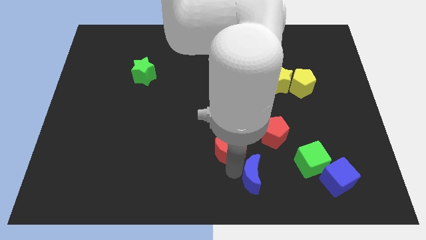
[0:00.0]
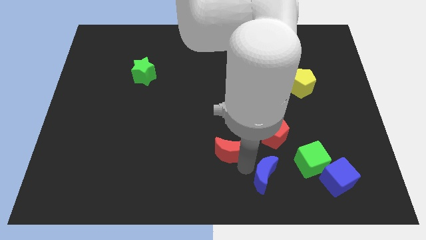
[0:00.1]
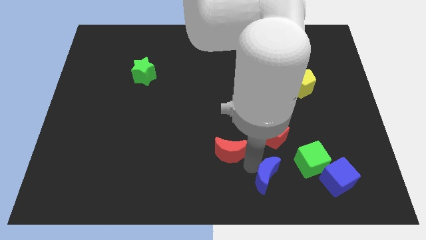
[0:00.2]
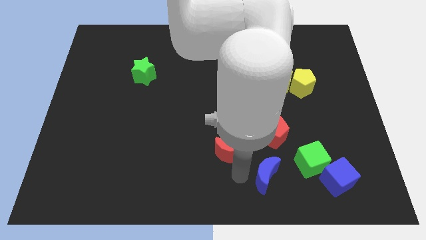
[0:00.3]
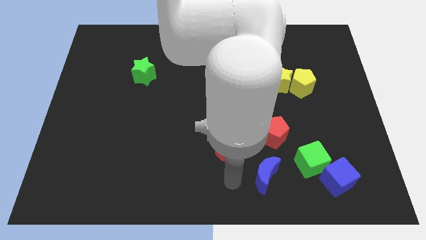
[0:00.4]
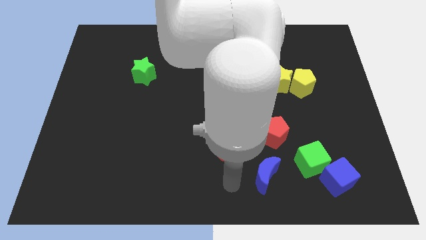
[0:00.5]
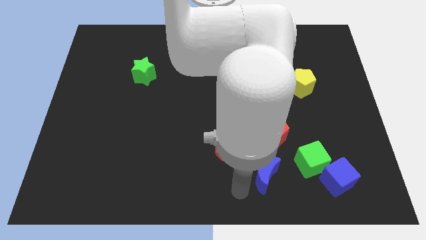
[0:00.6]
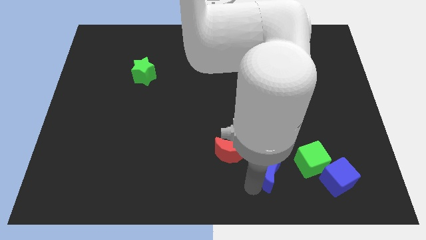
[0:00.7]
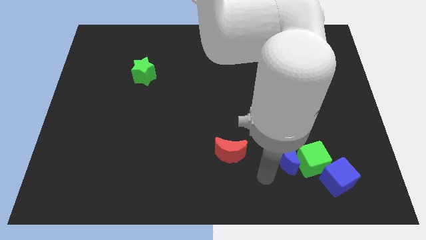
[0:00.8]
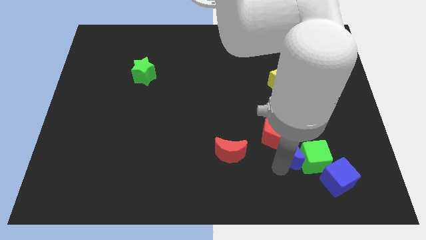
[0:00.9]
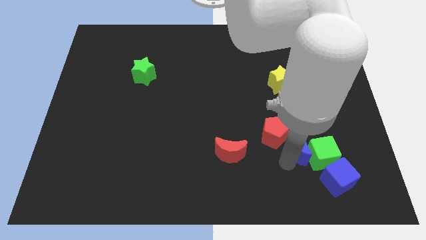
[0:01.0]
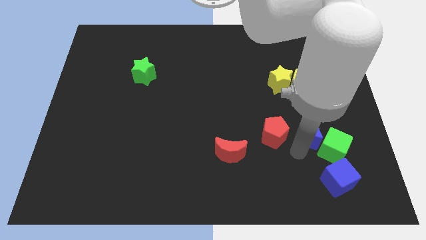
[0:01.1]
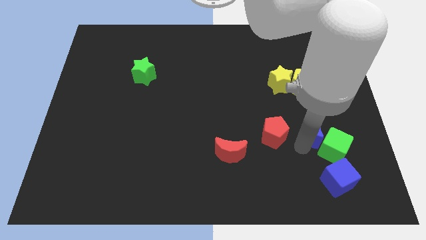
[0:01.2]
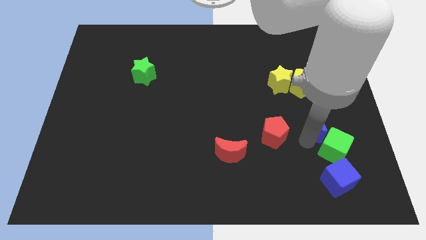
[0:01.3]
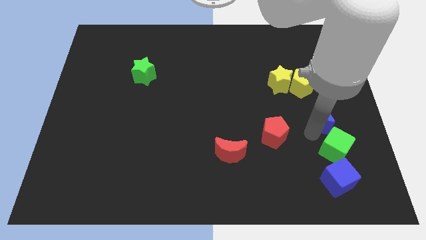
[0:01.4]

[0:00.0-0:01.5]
move the blue crescent to the top left of green cube

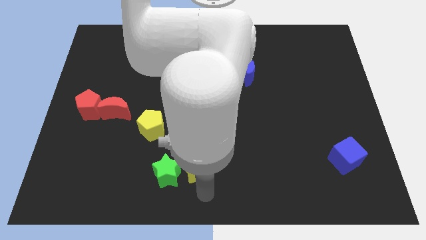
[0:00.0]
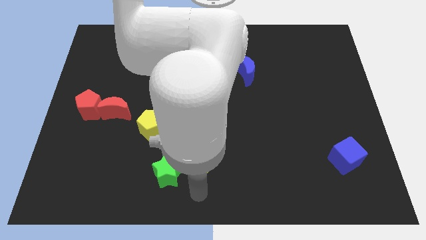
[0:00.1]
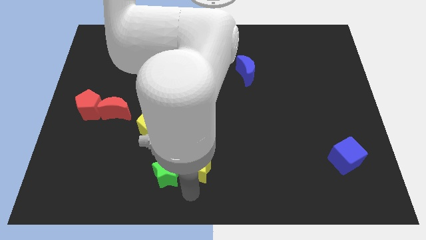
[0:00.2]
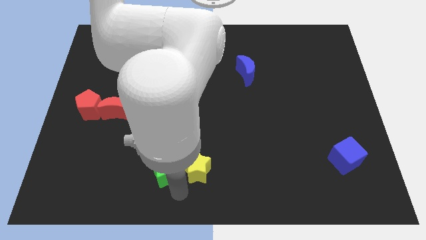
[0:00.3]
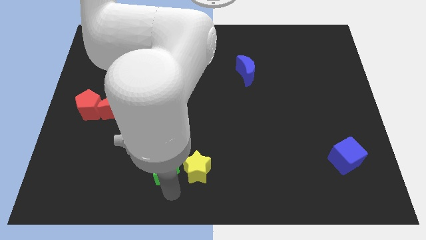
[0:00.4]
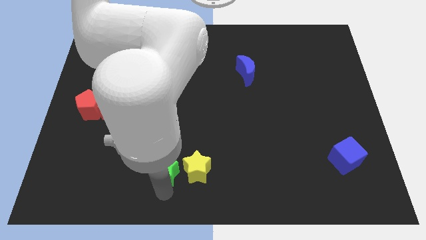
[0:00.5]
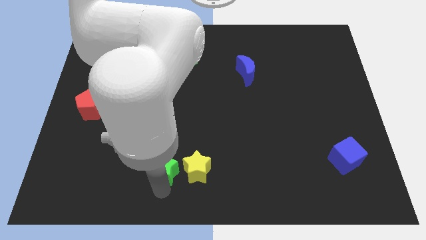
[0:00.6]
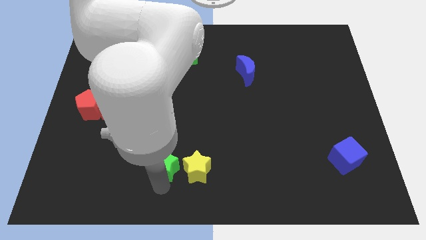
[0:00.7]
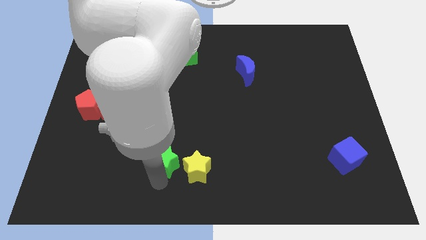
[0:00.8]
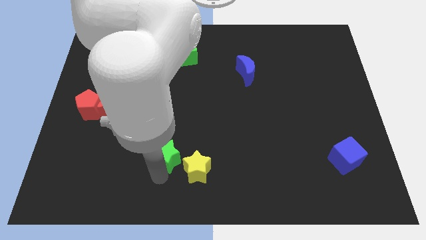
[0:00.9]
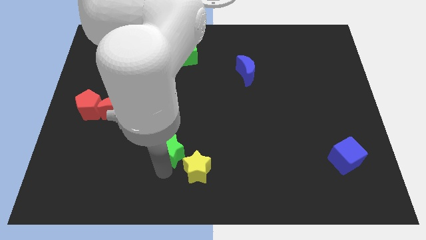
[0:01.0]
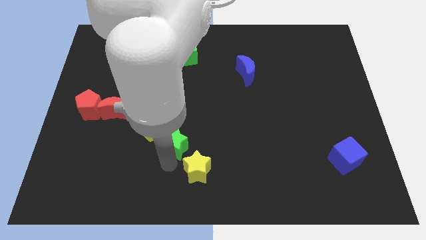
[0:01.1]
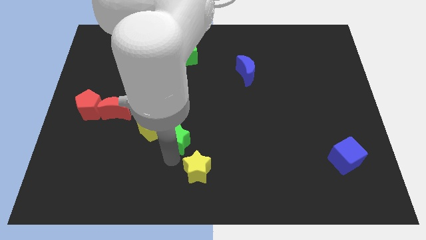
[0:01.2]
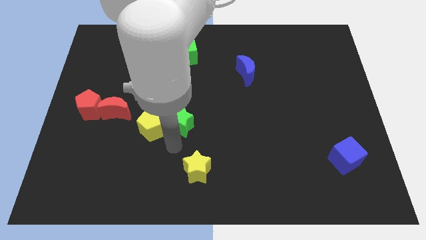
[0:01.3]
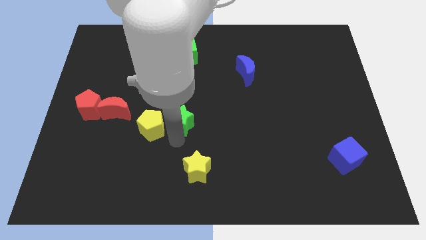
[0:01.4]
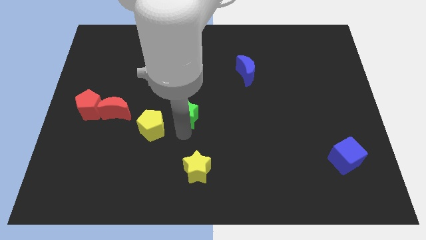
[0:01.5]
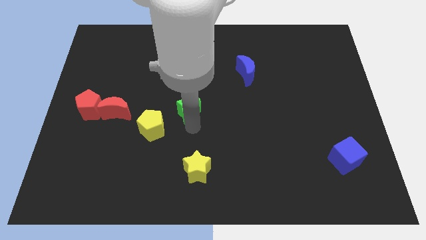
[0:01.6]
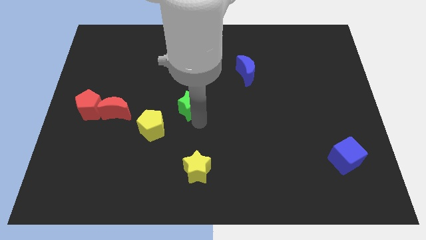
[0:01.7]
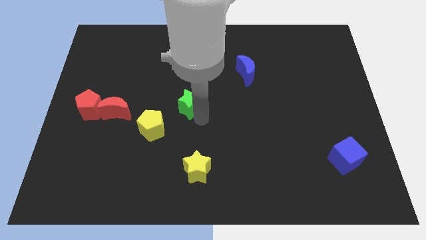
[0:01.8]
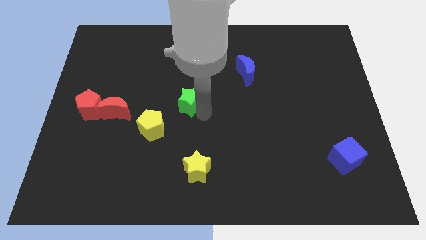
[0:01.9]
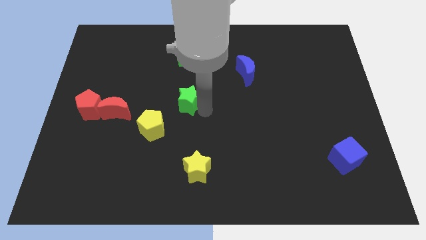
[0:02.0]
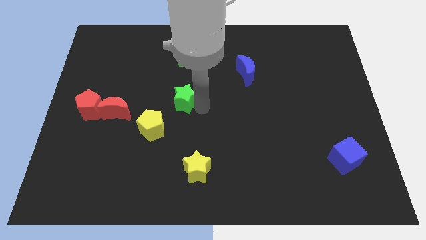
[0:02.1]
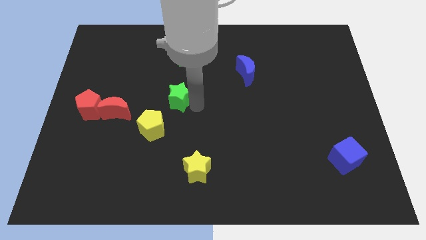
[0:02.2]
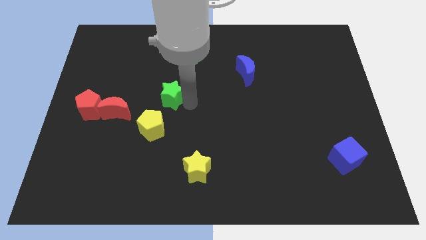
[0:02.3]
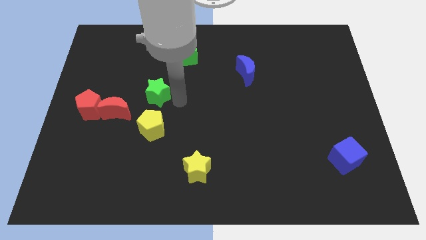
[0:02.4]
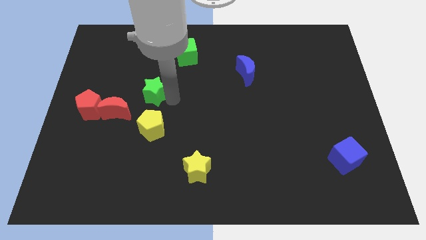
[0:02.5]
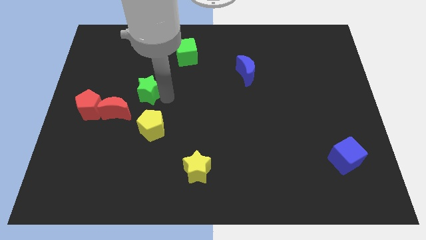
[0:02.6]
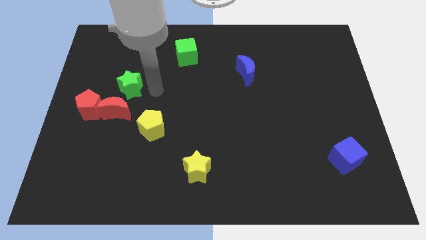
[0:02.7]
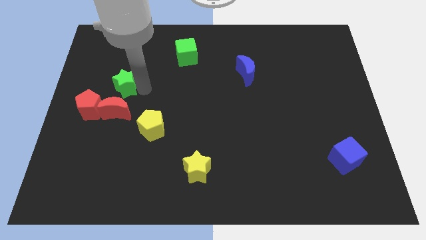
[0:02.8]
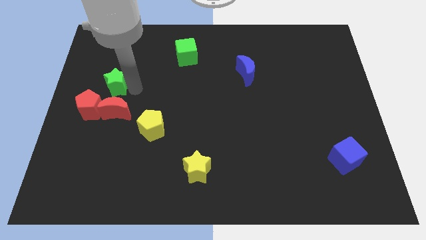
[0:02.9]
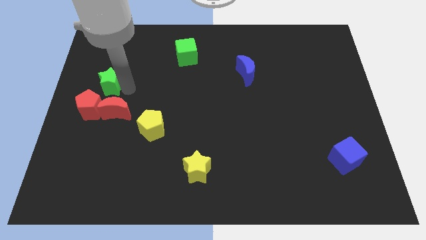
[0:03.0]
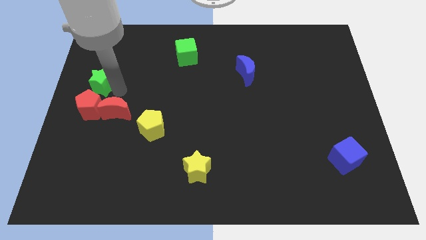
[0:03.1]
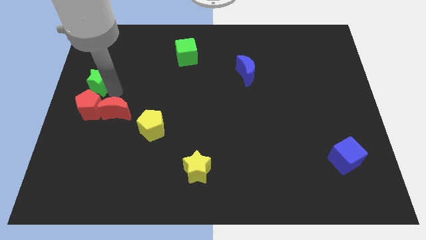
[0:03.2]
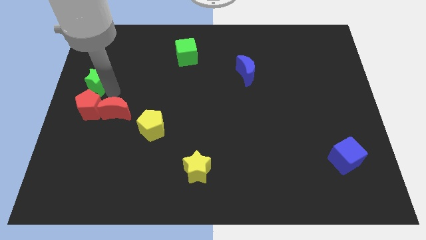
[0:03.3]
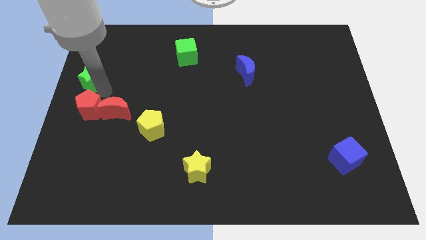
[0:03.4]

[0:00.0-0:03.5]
place the green star above the red pentagon

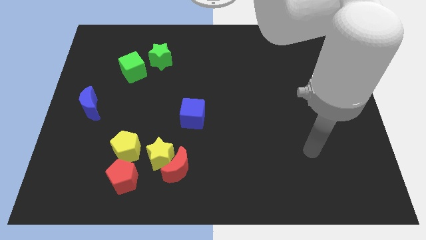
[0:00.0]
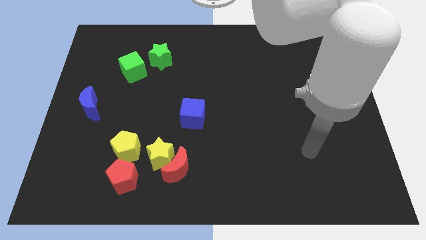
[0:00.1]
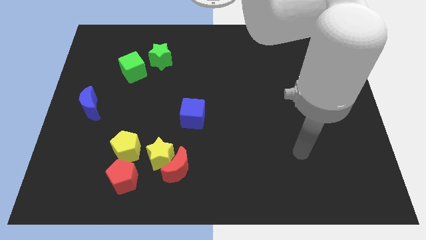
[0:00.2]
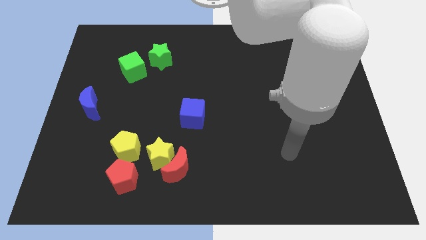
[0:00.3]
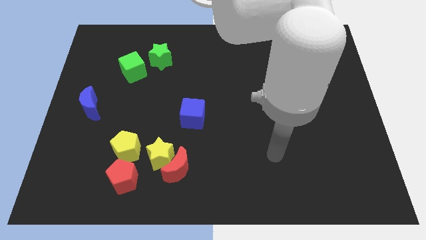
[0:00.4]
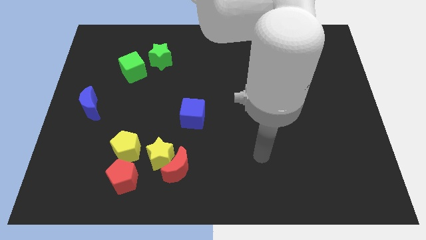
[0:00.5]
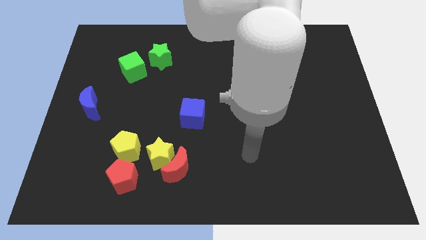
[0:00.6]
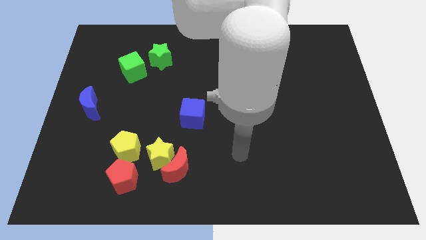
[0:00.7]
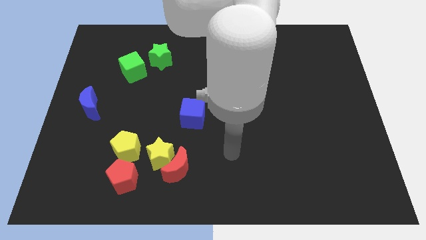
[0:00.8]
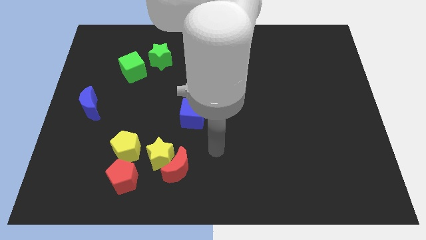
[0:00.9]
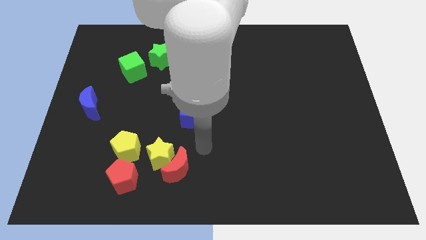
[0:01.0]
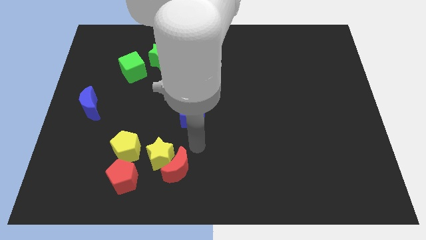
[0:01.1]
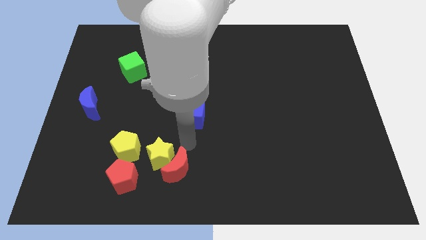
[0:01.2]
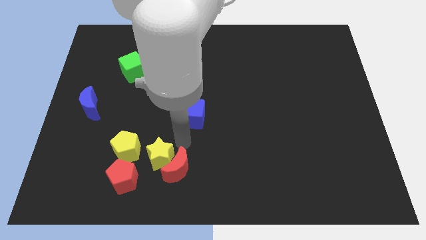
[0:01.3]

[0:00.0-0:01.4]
point your arm at the bottom of blue cube

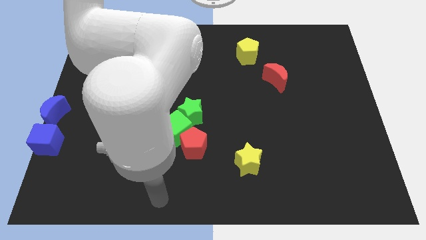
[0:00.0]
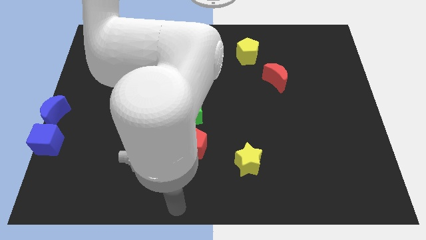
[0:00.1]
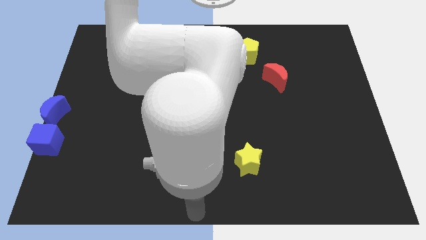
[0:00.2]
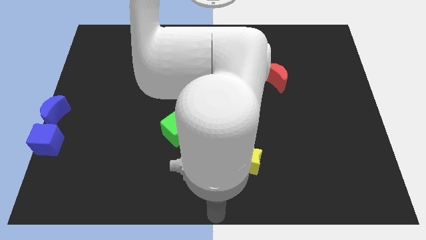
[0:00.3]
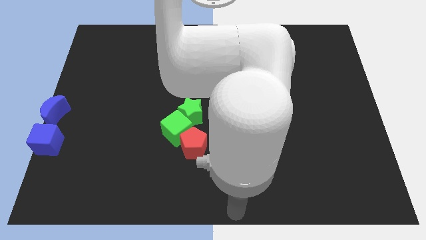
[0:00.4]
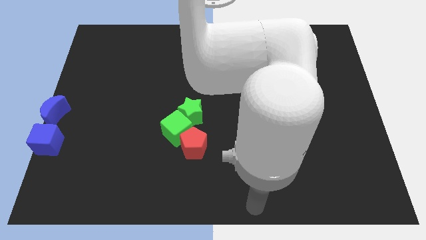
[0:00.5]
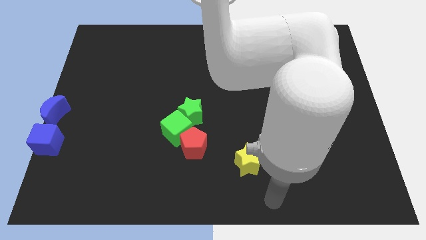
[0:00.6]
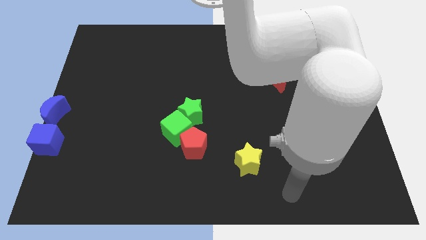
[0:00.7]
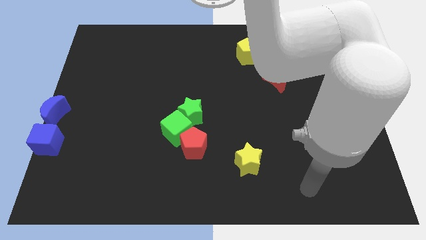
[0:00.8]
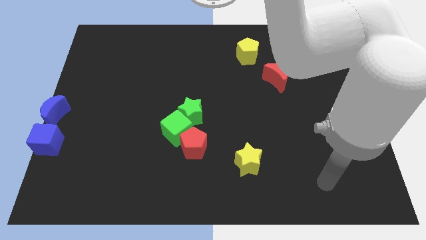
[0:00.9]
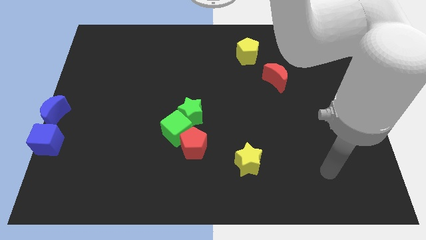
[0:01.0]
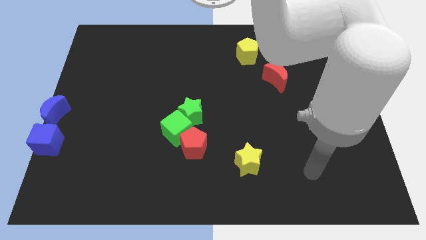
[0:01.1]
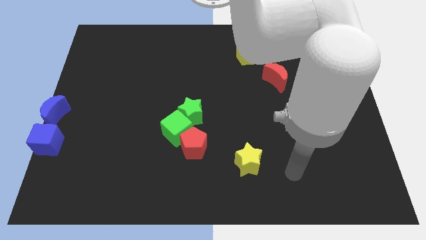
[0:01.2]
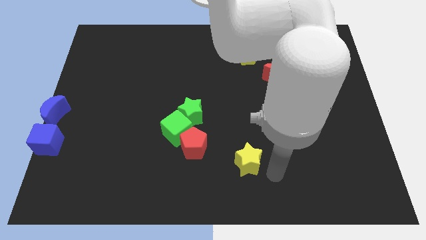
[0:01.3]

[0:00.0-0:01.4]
move your arm to the right side of the yellow star

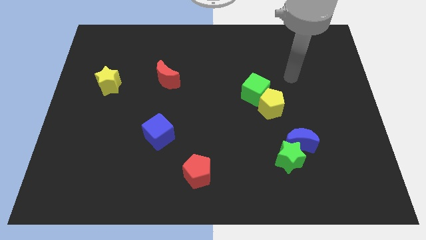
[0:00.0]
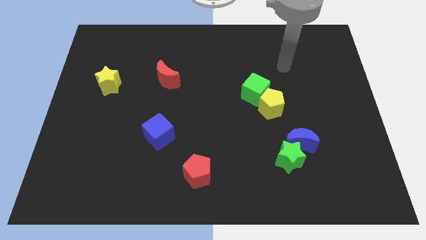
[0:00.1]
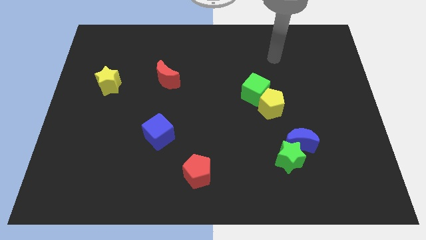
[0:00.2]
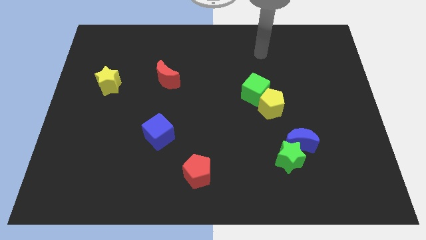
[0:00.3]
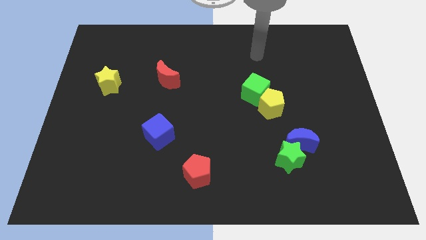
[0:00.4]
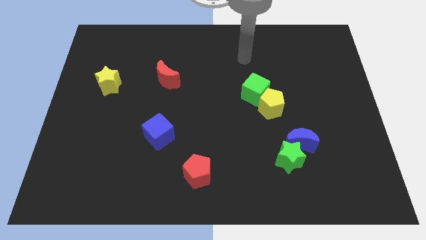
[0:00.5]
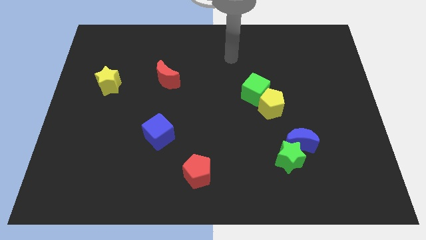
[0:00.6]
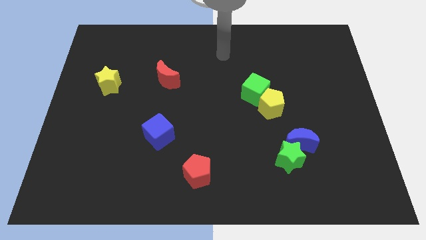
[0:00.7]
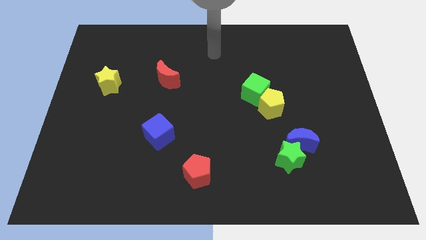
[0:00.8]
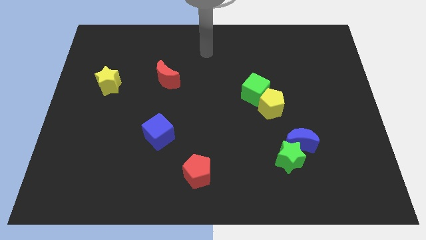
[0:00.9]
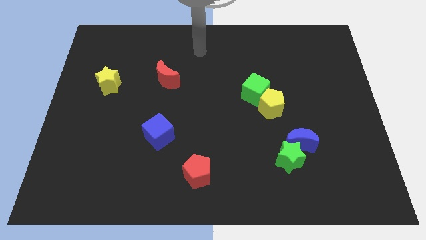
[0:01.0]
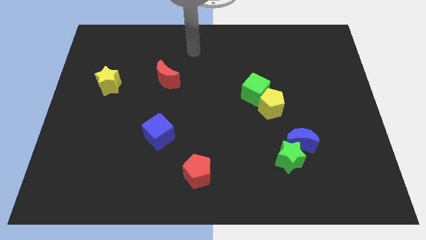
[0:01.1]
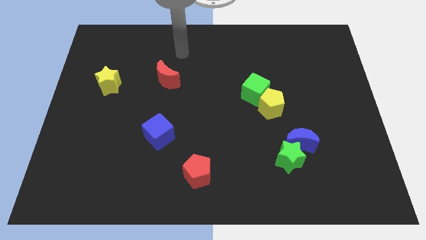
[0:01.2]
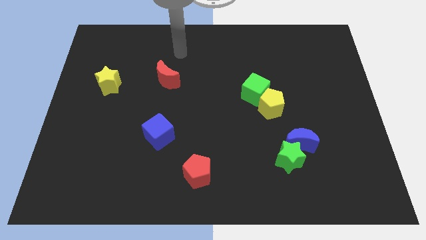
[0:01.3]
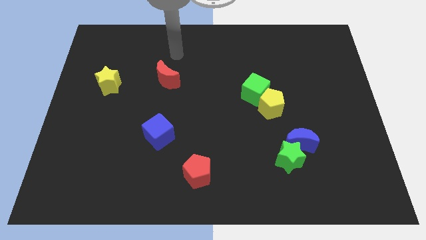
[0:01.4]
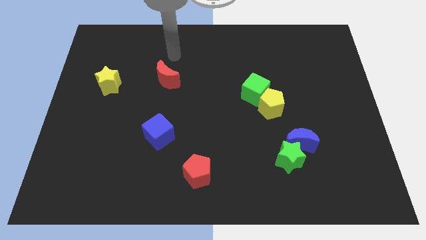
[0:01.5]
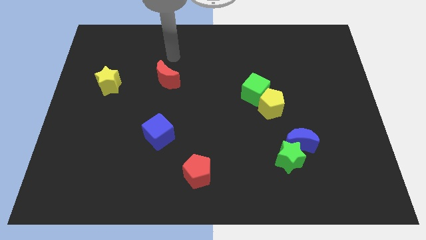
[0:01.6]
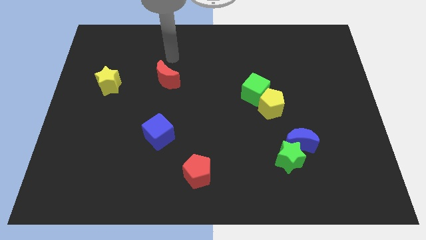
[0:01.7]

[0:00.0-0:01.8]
point your arm at the top of the red crescent
